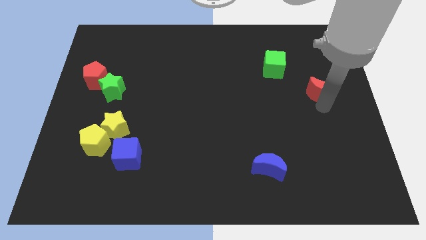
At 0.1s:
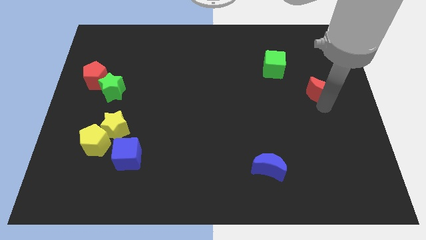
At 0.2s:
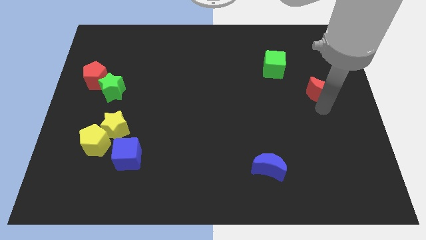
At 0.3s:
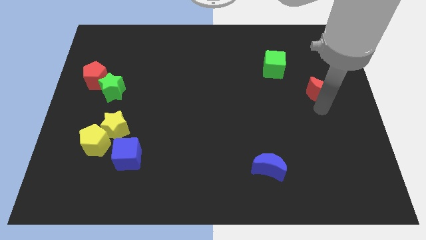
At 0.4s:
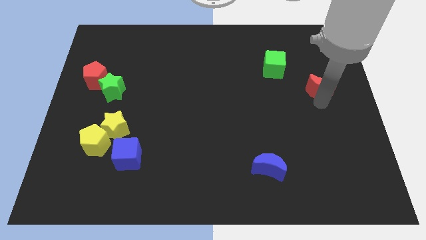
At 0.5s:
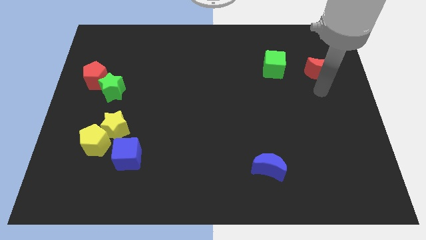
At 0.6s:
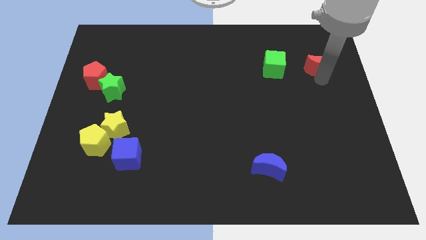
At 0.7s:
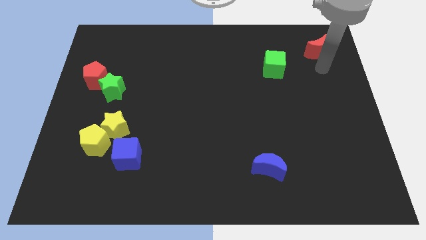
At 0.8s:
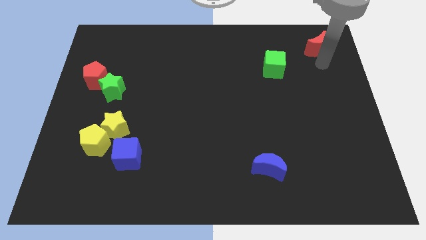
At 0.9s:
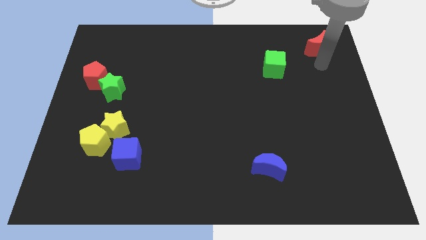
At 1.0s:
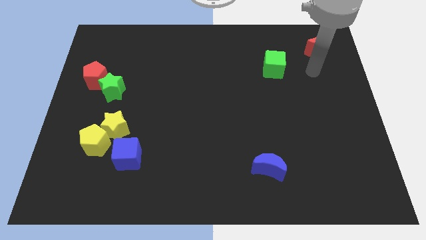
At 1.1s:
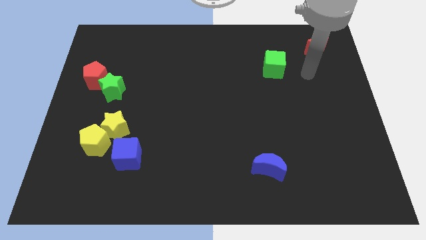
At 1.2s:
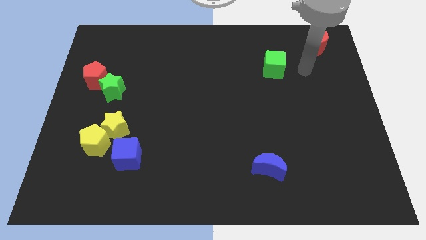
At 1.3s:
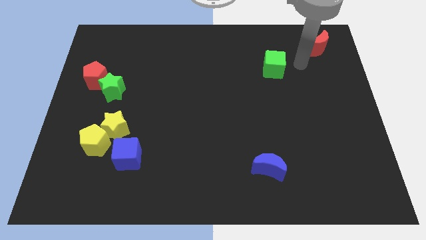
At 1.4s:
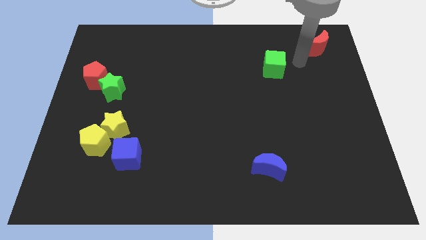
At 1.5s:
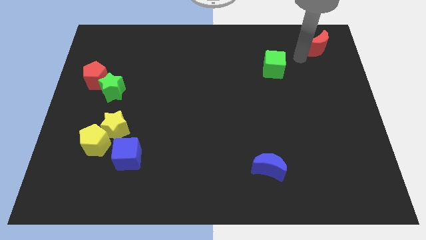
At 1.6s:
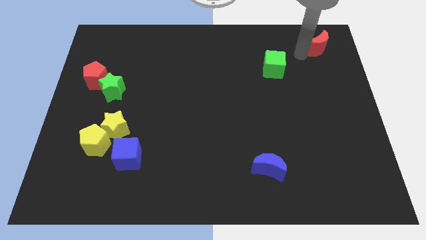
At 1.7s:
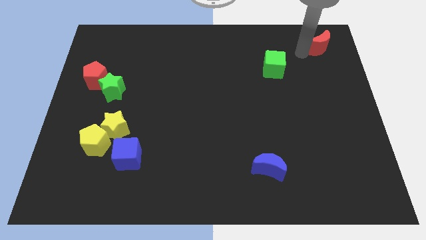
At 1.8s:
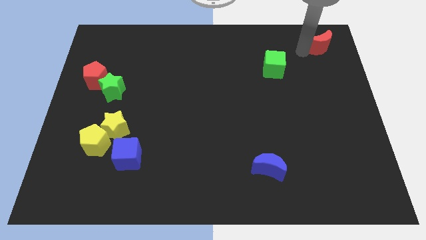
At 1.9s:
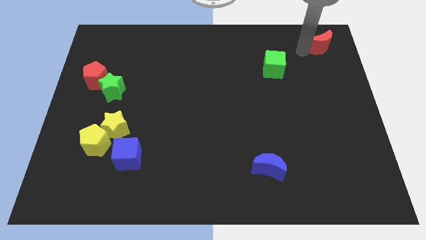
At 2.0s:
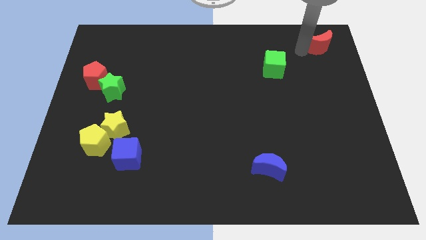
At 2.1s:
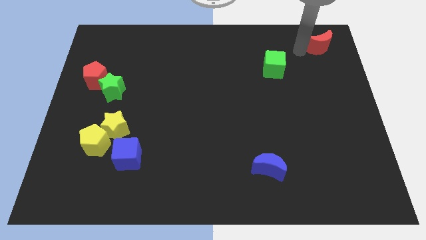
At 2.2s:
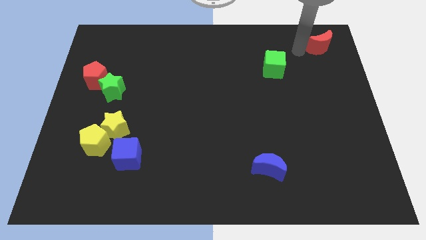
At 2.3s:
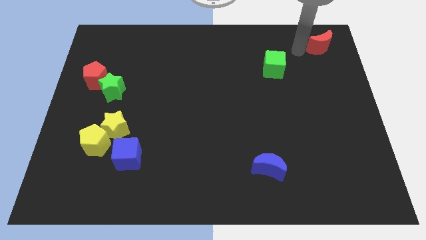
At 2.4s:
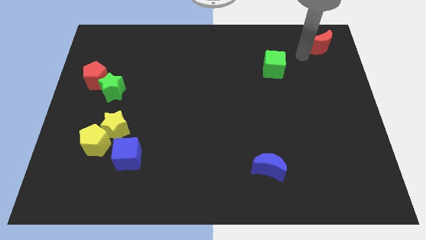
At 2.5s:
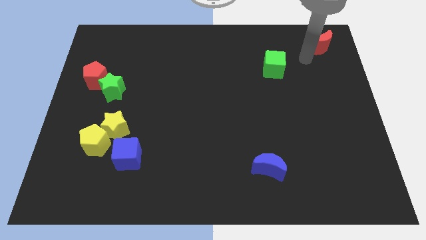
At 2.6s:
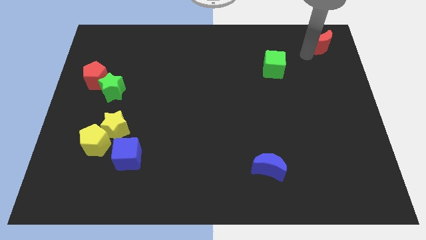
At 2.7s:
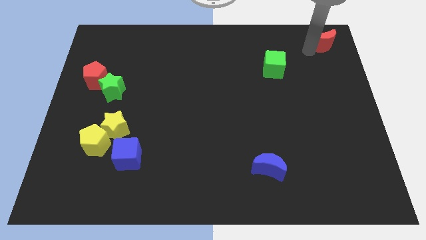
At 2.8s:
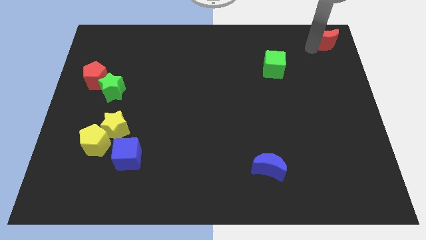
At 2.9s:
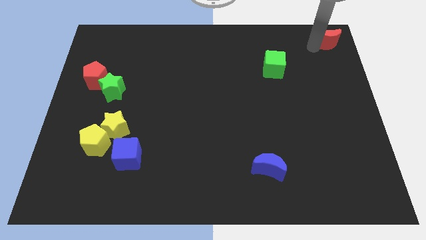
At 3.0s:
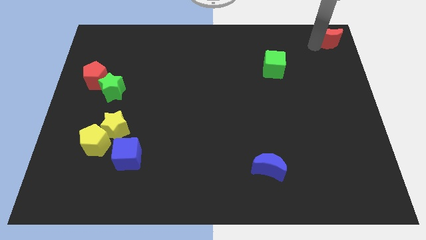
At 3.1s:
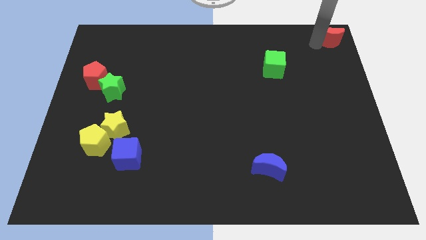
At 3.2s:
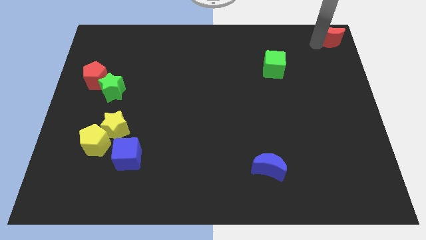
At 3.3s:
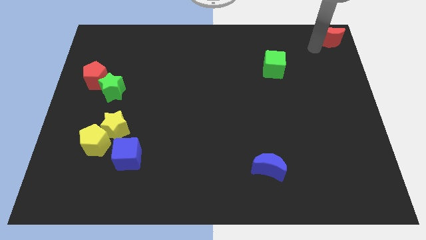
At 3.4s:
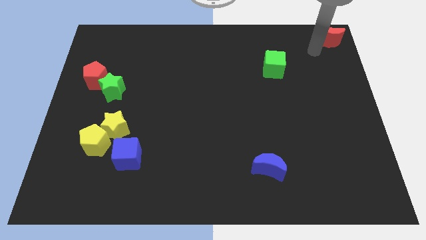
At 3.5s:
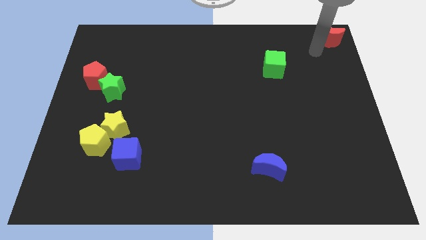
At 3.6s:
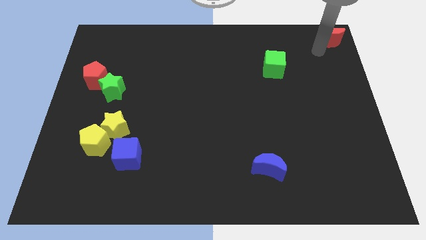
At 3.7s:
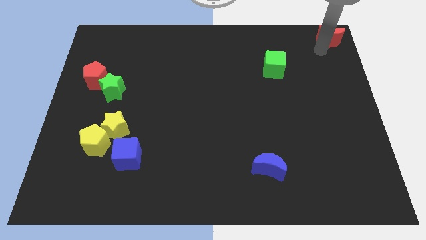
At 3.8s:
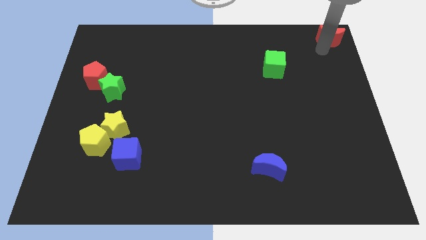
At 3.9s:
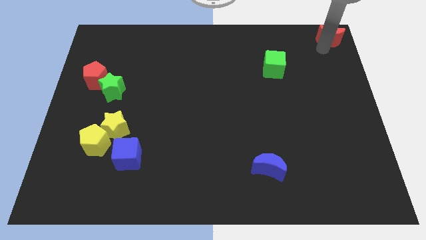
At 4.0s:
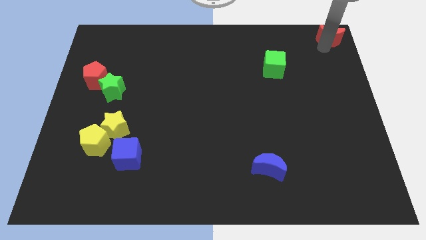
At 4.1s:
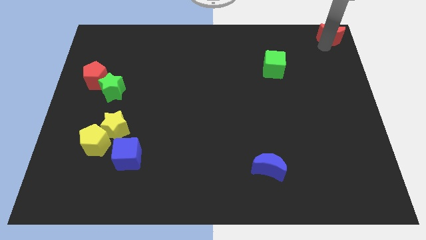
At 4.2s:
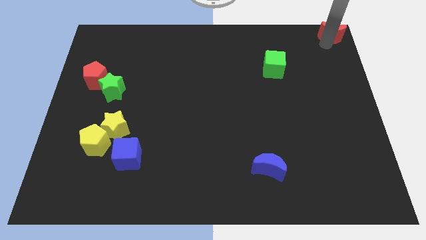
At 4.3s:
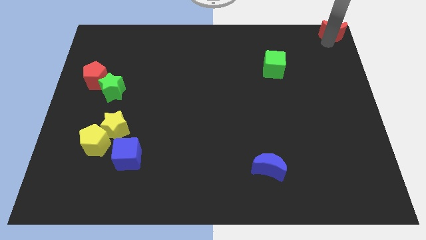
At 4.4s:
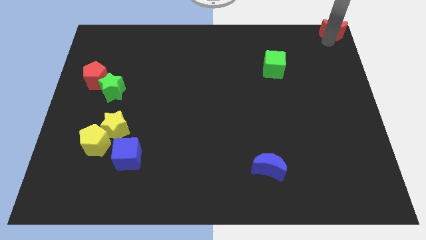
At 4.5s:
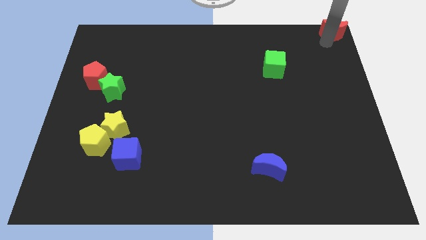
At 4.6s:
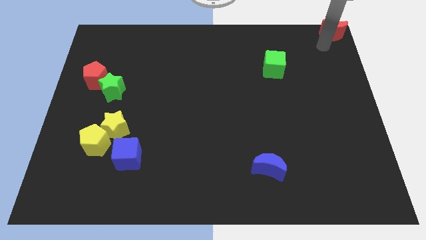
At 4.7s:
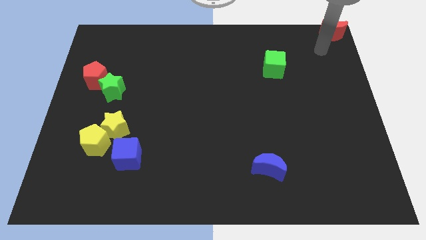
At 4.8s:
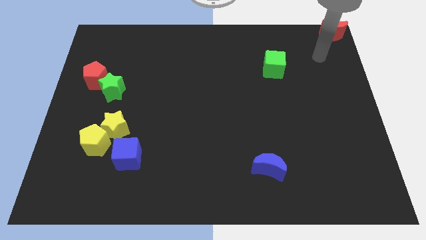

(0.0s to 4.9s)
push the red crescent towards the right corner of the board

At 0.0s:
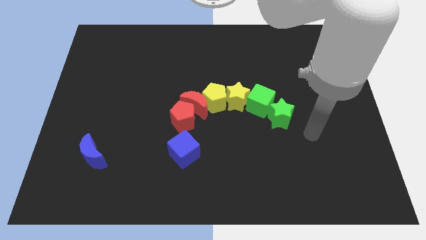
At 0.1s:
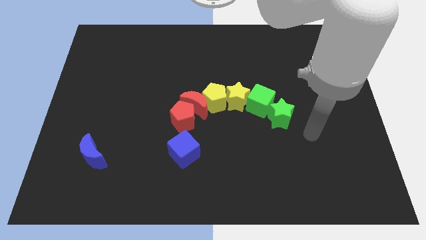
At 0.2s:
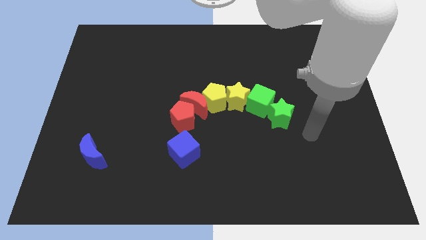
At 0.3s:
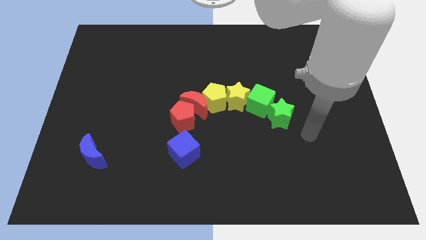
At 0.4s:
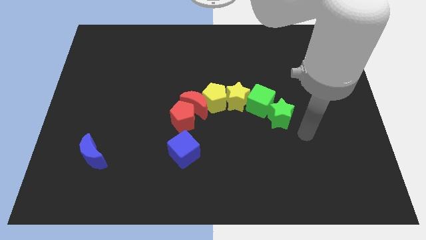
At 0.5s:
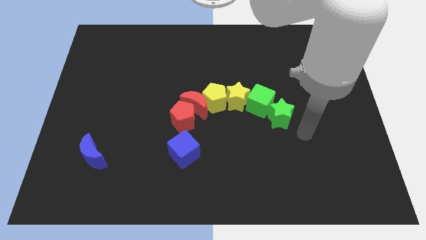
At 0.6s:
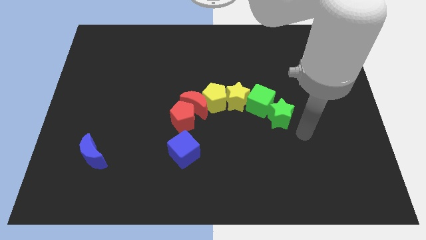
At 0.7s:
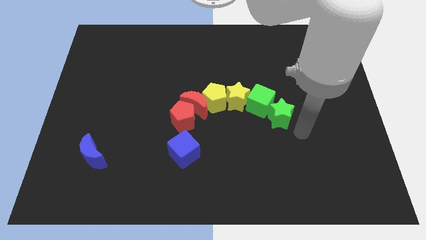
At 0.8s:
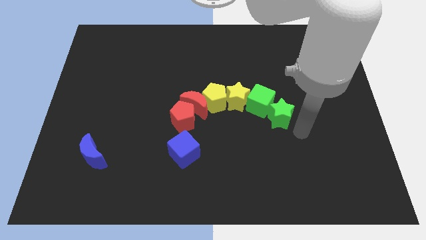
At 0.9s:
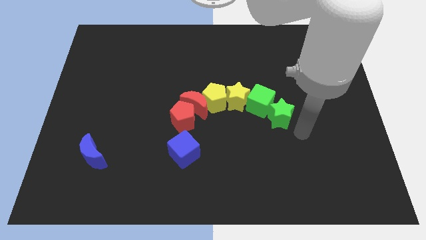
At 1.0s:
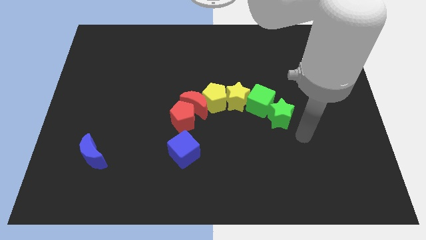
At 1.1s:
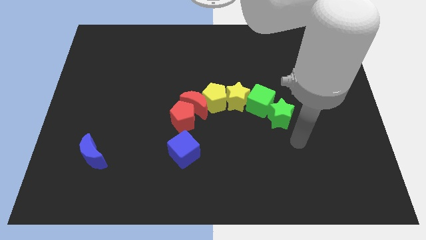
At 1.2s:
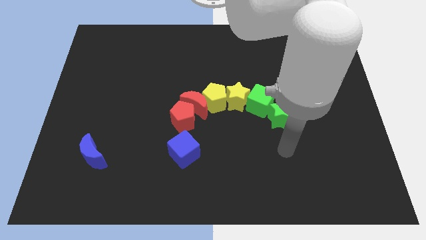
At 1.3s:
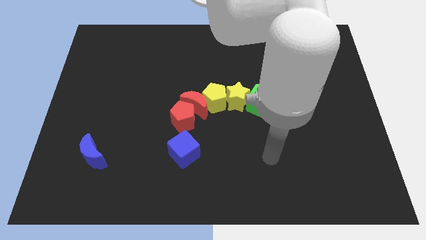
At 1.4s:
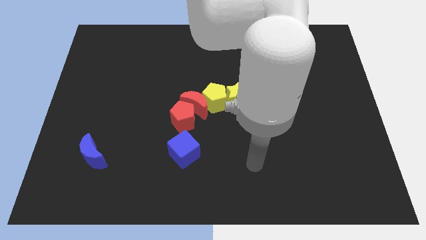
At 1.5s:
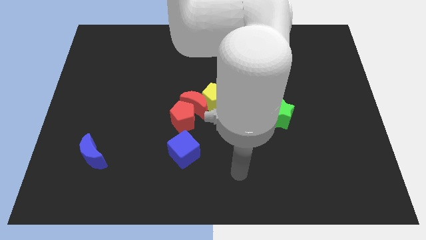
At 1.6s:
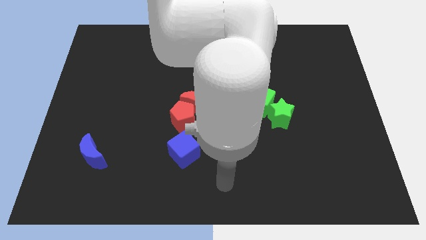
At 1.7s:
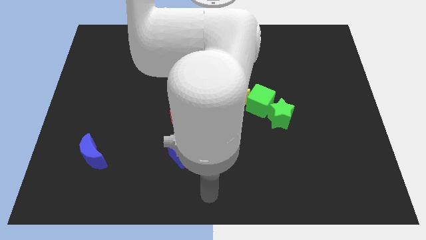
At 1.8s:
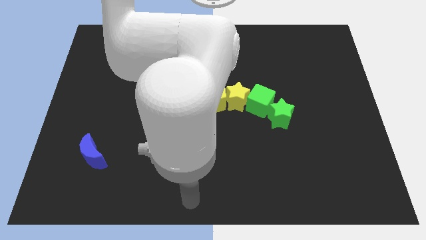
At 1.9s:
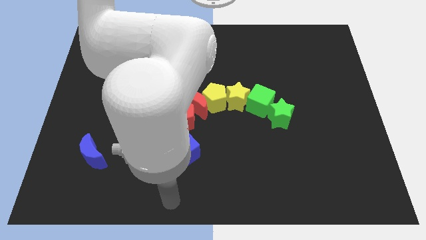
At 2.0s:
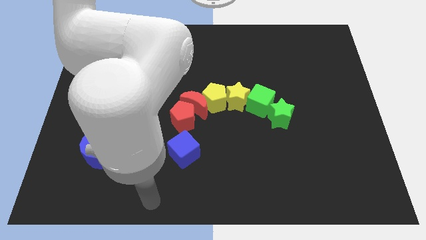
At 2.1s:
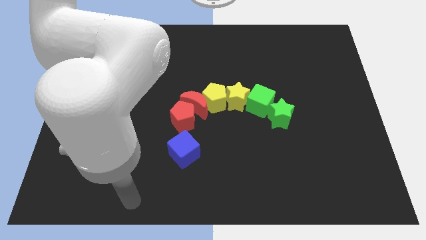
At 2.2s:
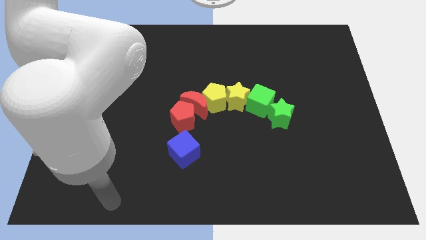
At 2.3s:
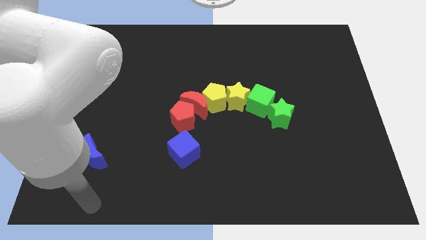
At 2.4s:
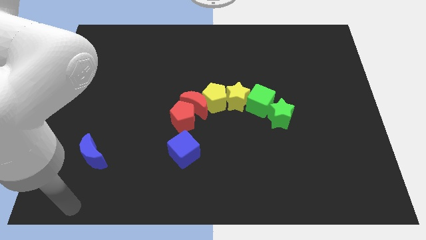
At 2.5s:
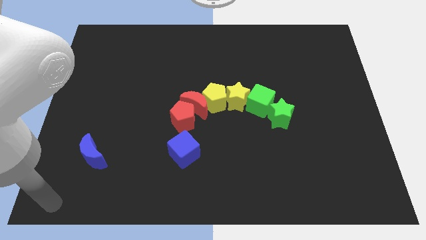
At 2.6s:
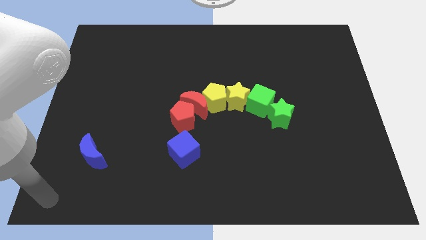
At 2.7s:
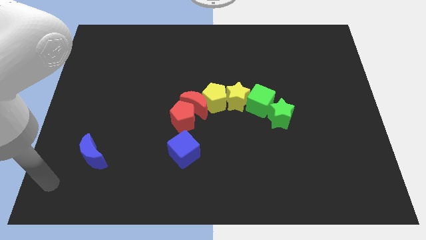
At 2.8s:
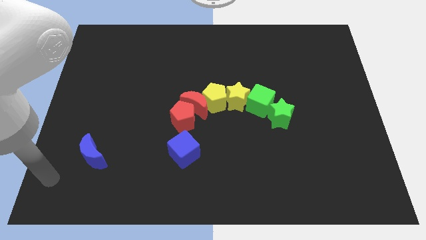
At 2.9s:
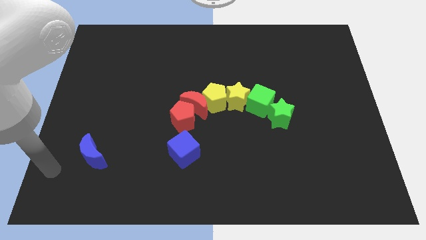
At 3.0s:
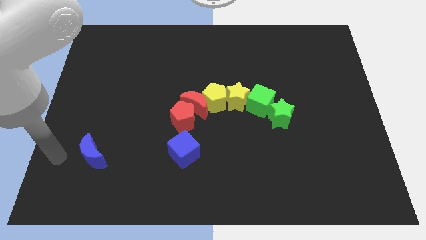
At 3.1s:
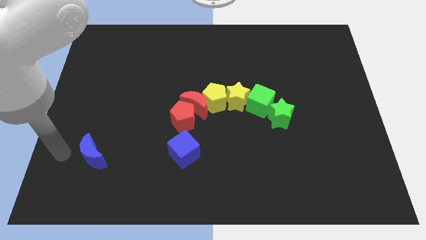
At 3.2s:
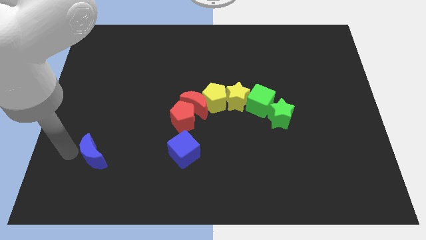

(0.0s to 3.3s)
move the arm towards the blue moon

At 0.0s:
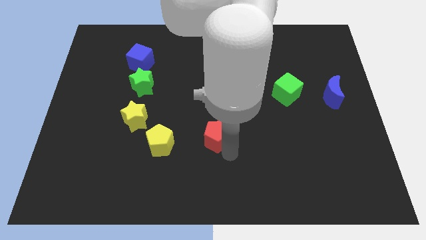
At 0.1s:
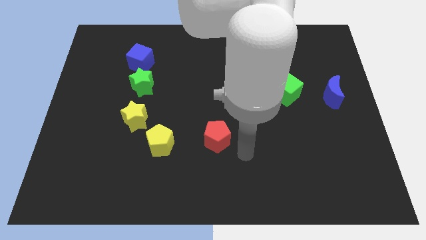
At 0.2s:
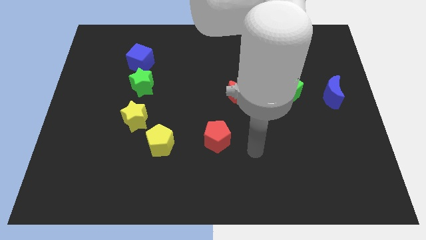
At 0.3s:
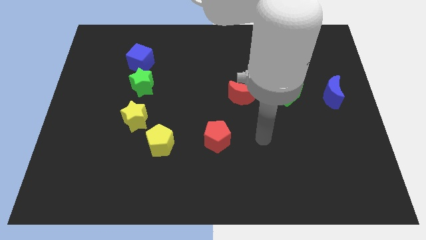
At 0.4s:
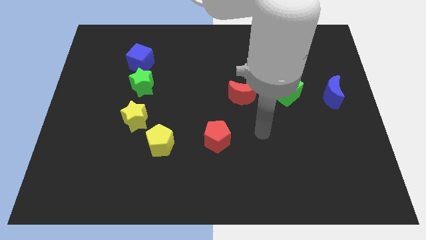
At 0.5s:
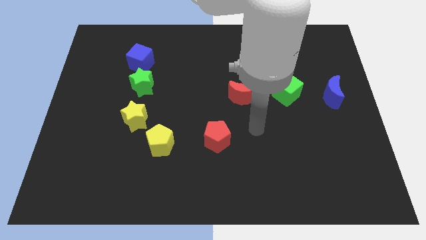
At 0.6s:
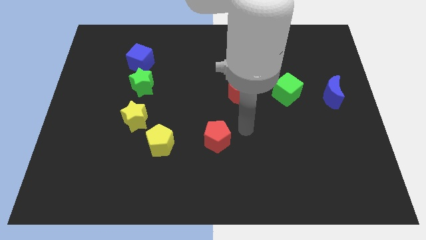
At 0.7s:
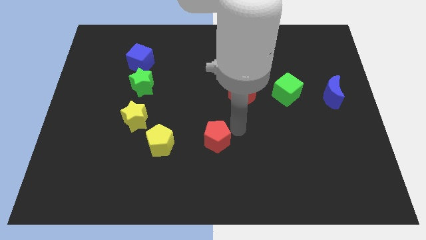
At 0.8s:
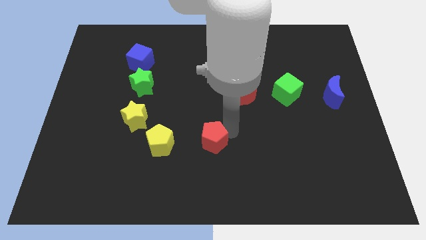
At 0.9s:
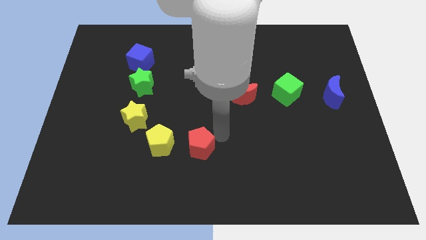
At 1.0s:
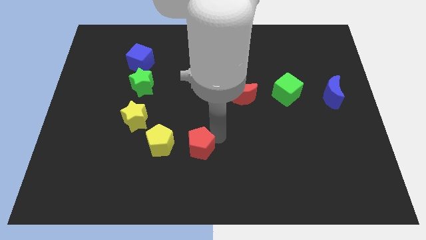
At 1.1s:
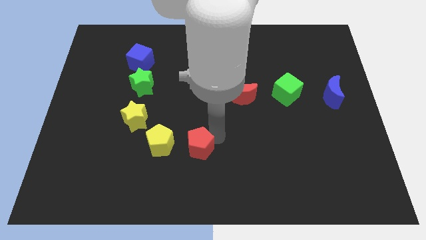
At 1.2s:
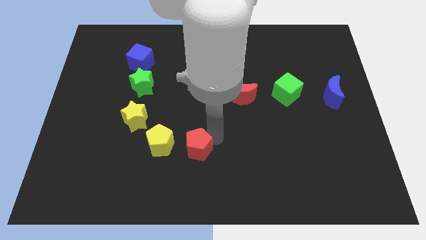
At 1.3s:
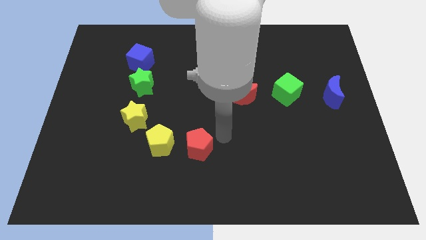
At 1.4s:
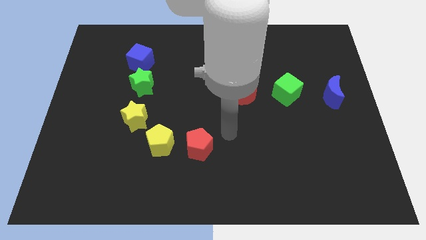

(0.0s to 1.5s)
drag red pentagon towards the right side of yellow pentagon
